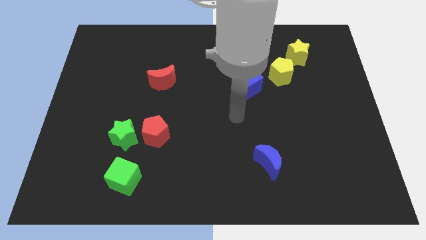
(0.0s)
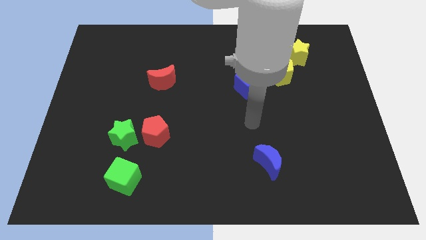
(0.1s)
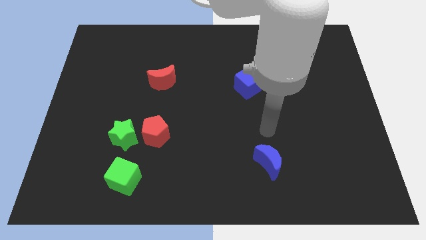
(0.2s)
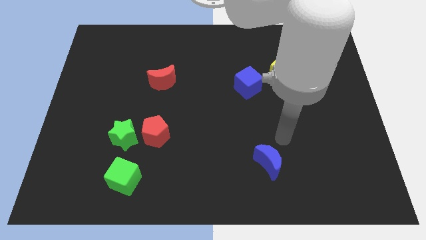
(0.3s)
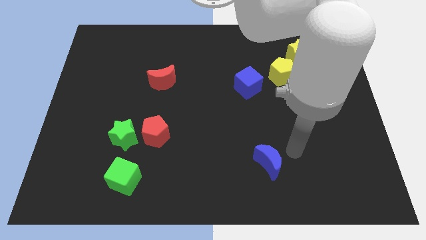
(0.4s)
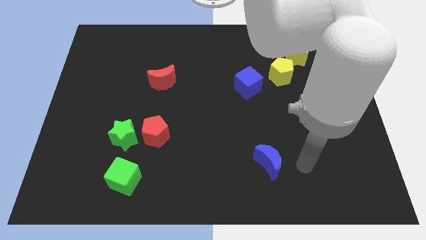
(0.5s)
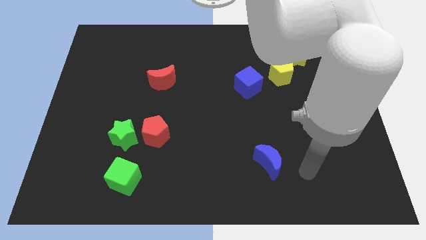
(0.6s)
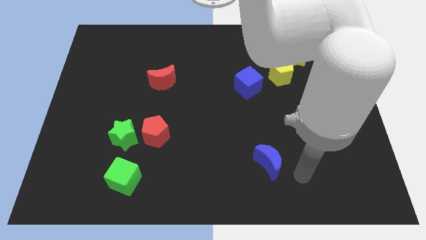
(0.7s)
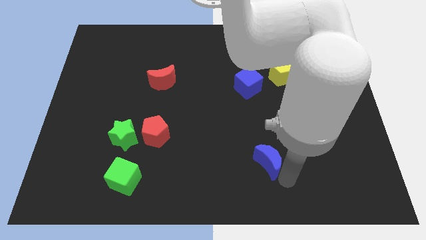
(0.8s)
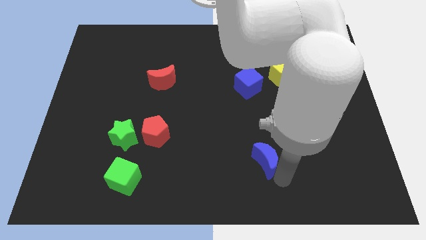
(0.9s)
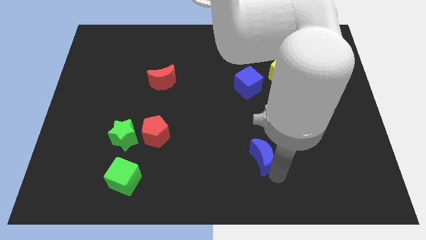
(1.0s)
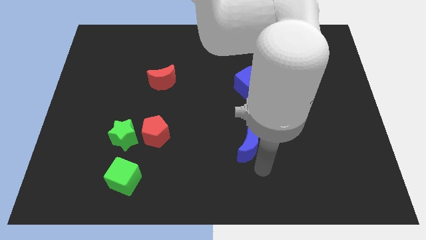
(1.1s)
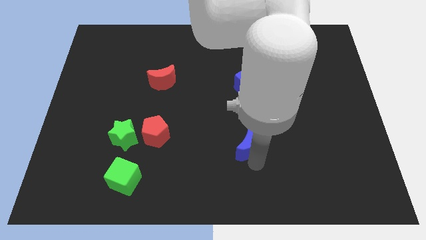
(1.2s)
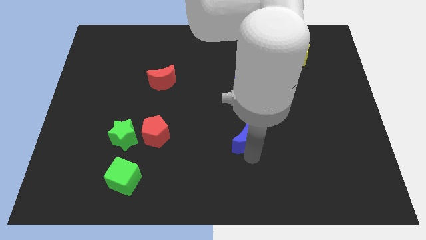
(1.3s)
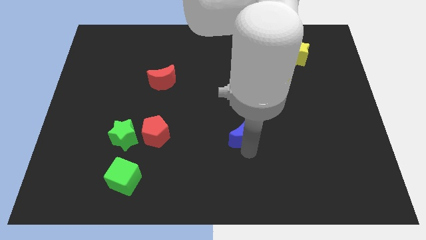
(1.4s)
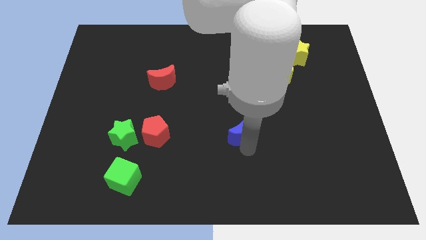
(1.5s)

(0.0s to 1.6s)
move the blue crescent parallel to the right of the red pentagon

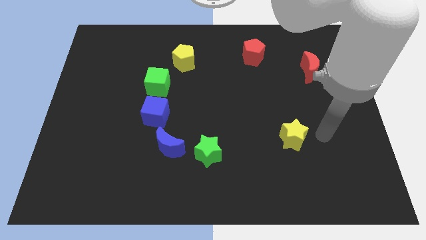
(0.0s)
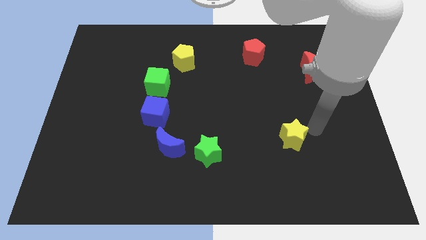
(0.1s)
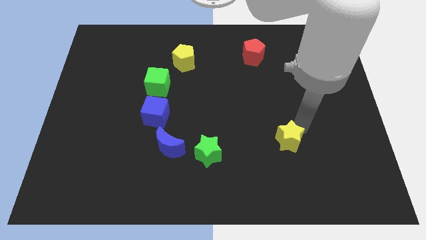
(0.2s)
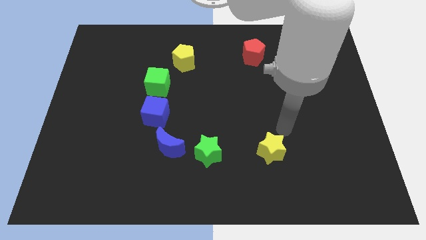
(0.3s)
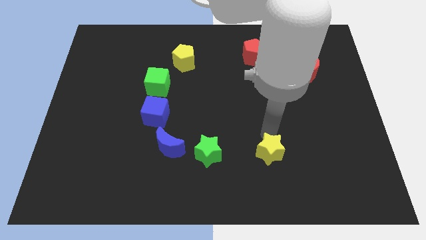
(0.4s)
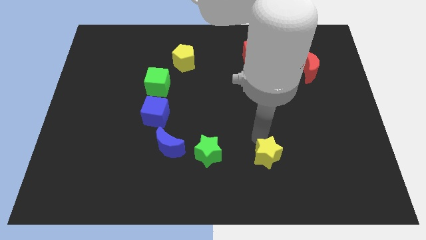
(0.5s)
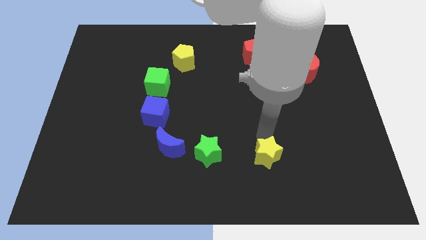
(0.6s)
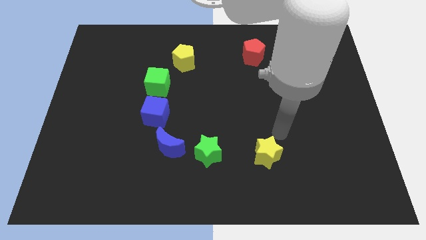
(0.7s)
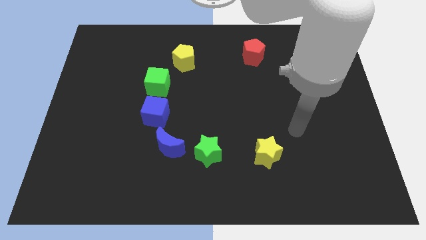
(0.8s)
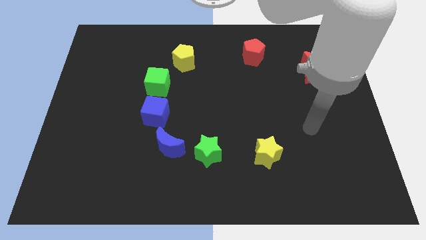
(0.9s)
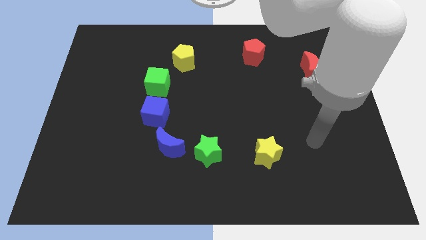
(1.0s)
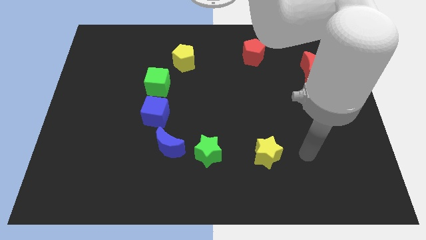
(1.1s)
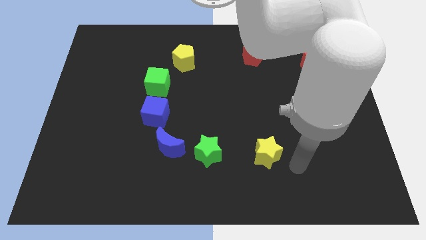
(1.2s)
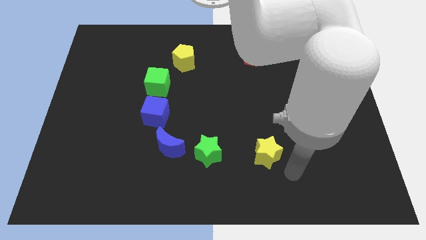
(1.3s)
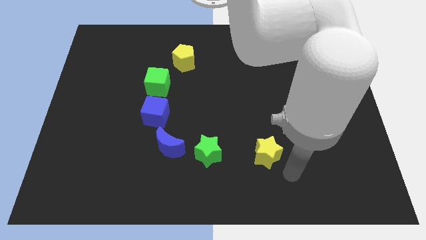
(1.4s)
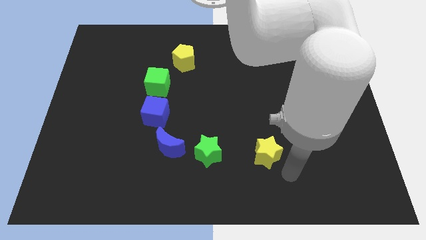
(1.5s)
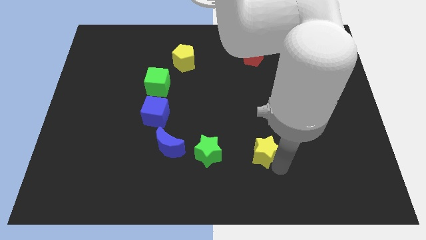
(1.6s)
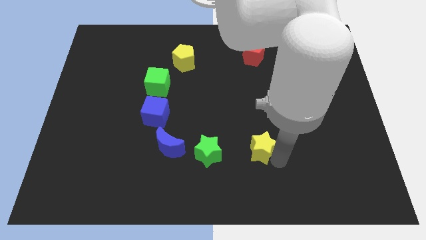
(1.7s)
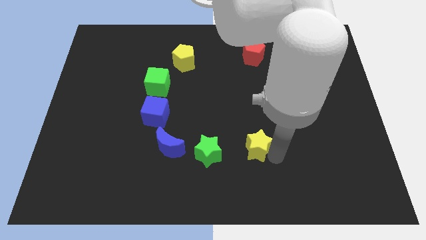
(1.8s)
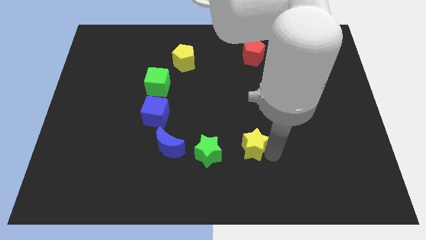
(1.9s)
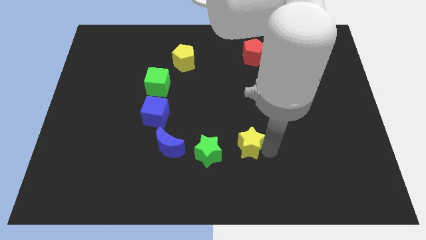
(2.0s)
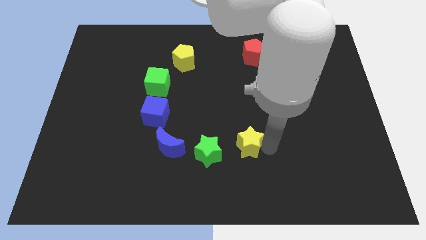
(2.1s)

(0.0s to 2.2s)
move the yellow star to the right of the green star

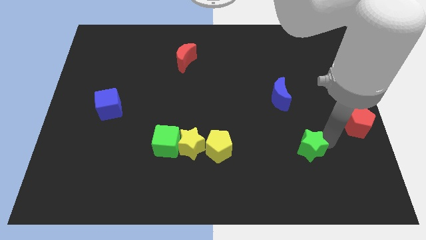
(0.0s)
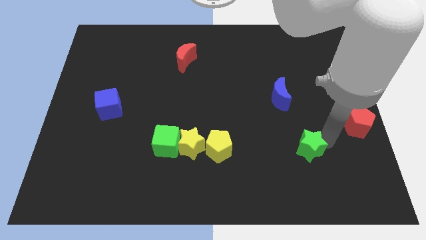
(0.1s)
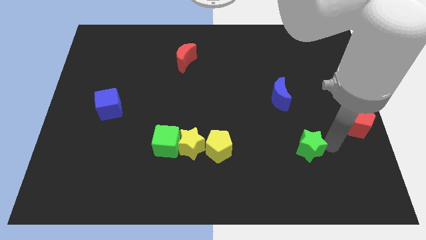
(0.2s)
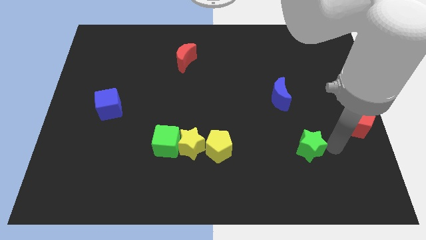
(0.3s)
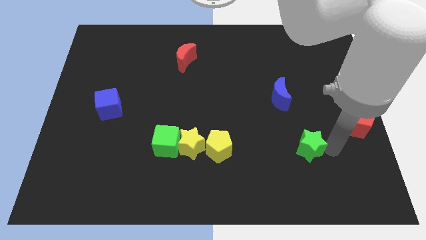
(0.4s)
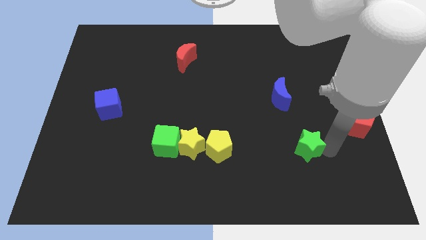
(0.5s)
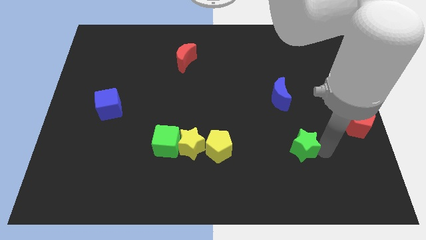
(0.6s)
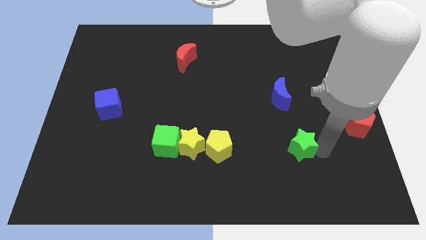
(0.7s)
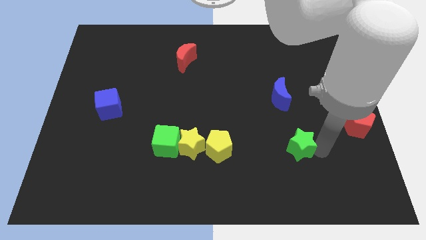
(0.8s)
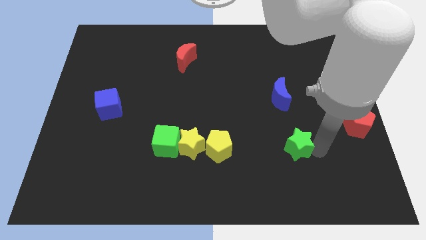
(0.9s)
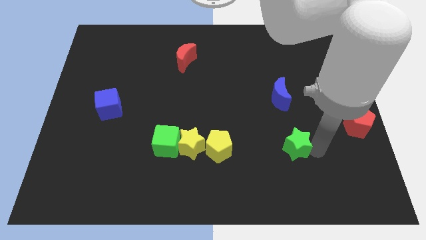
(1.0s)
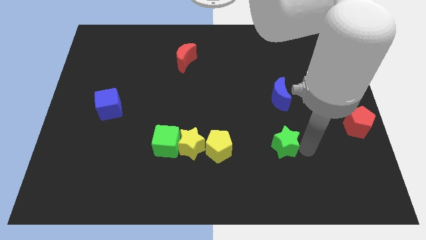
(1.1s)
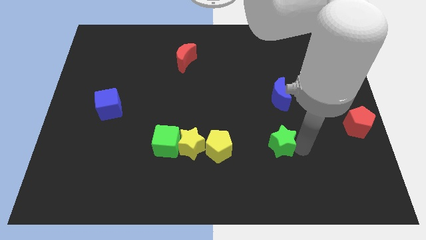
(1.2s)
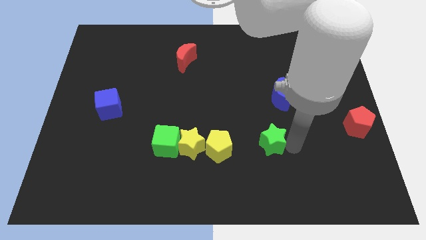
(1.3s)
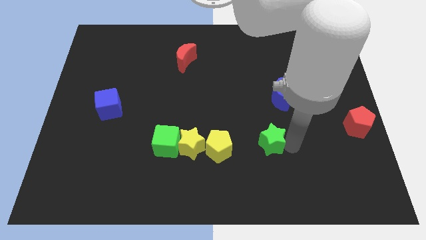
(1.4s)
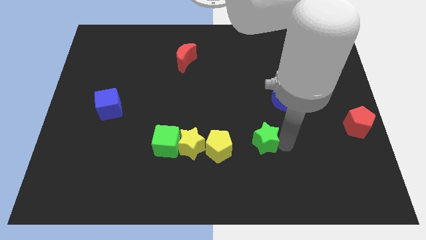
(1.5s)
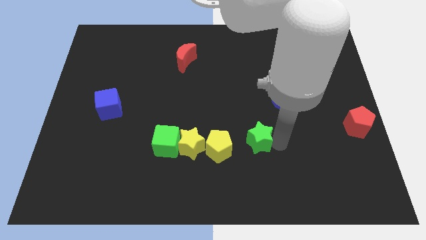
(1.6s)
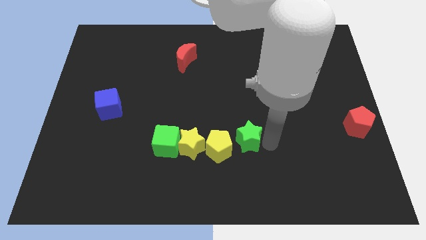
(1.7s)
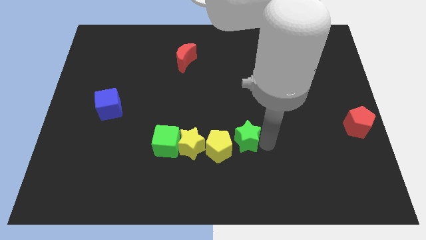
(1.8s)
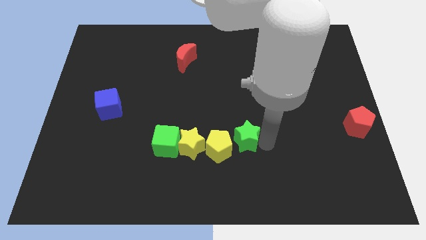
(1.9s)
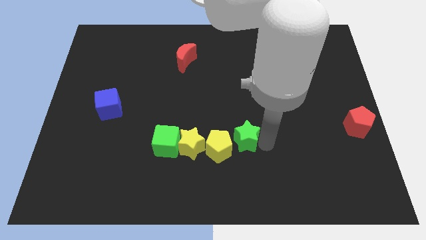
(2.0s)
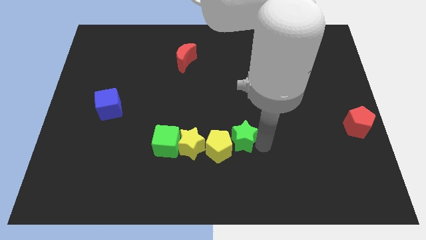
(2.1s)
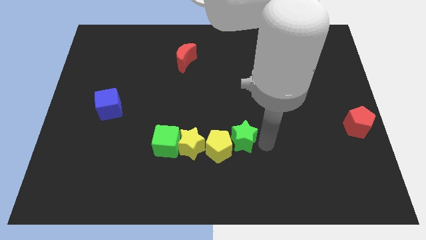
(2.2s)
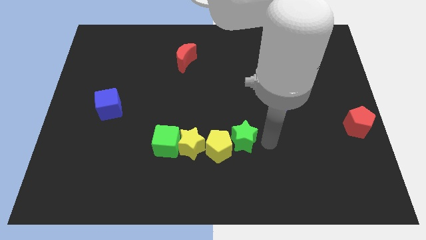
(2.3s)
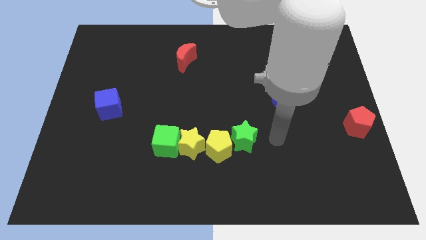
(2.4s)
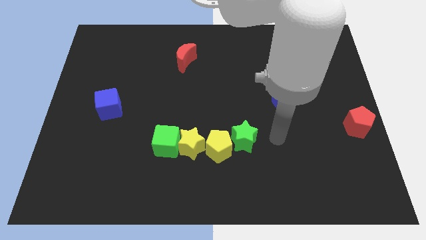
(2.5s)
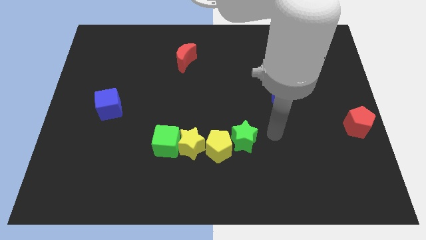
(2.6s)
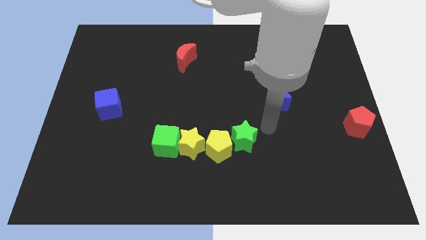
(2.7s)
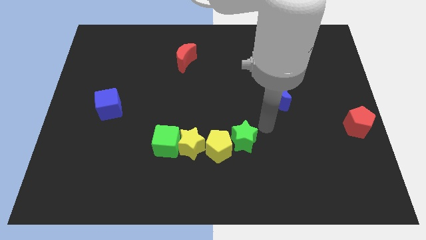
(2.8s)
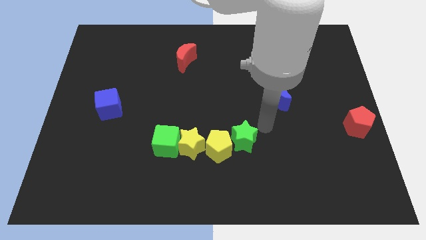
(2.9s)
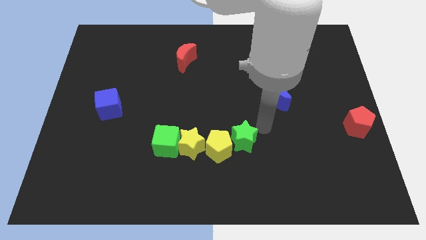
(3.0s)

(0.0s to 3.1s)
move green star towards yellow pentagon

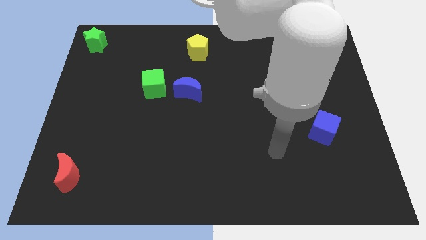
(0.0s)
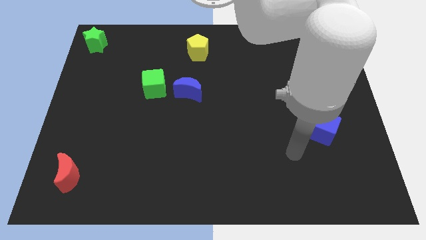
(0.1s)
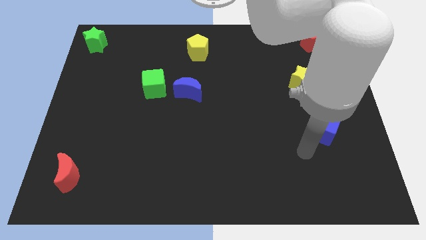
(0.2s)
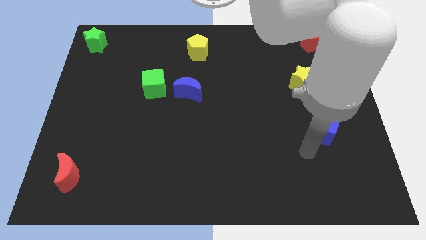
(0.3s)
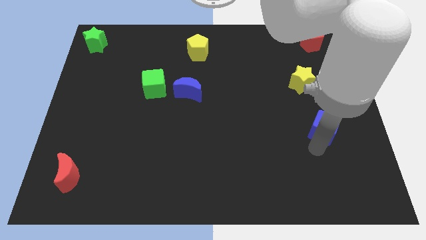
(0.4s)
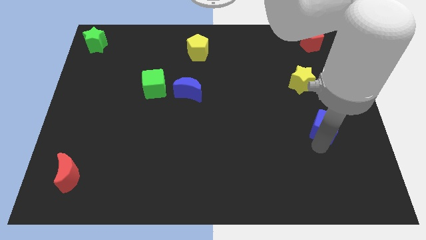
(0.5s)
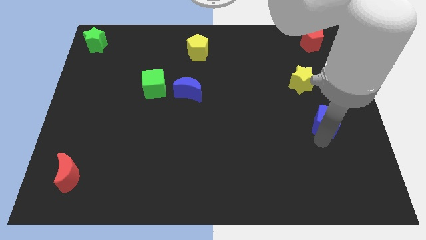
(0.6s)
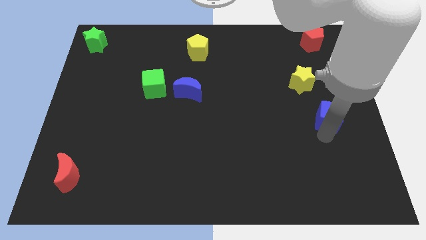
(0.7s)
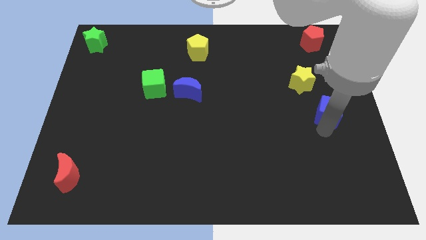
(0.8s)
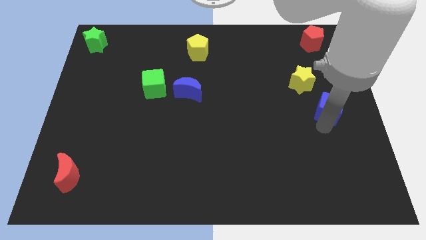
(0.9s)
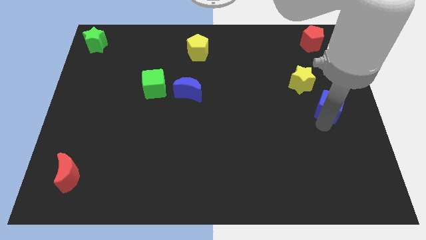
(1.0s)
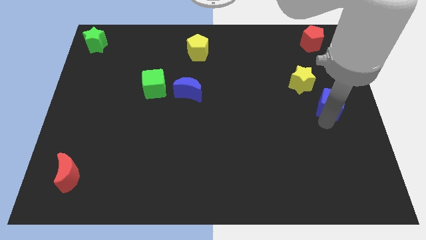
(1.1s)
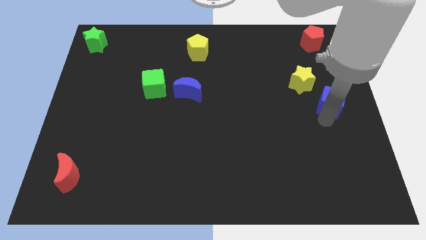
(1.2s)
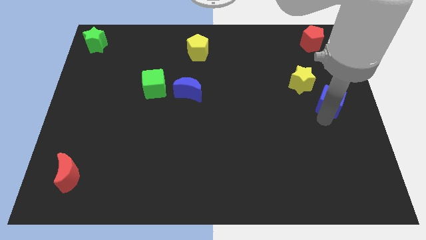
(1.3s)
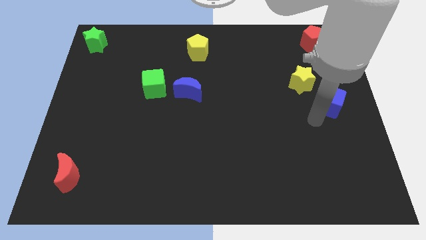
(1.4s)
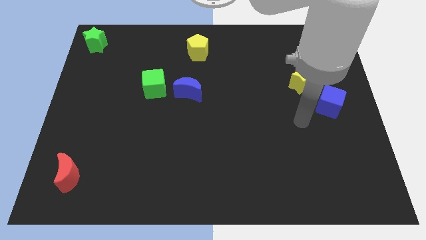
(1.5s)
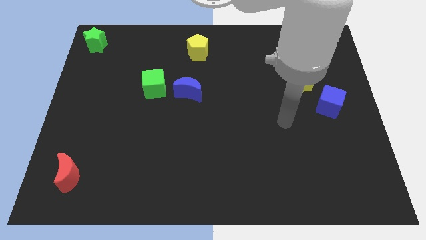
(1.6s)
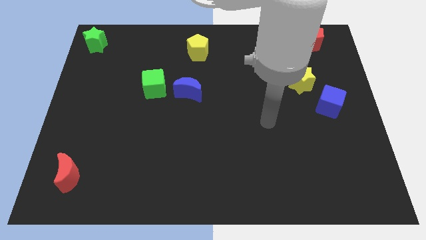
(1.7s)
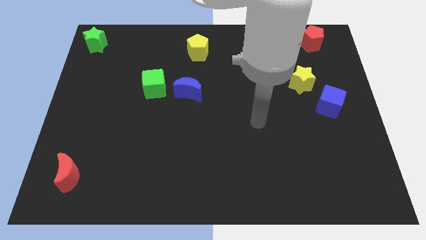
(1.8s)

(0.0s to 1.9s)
move the blue cube diagonally right of the yellow star

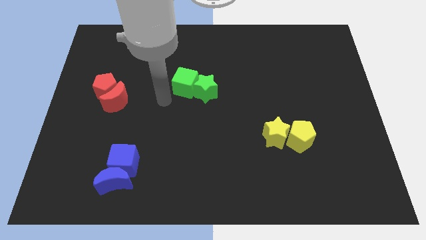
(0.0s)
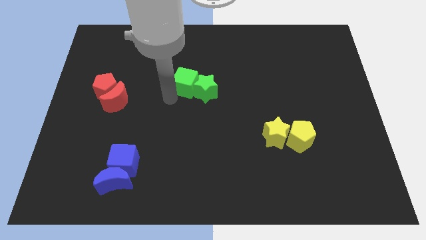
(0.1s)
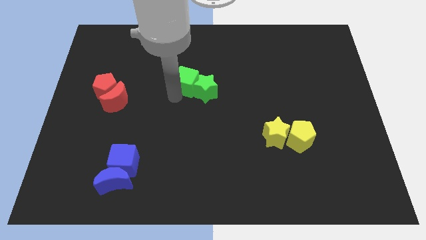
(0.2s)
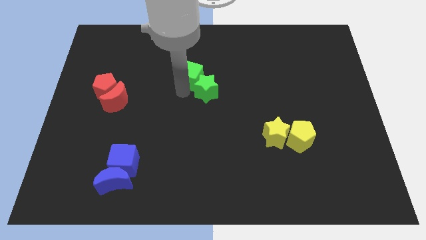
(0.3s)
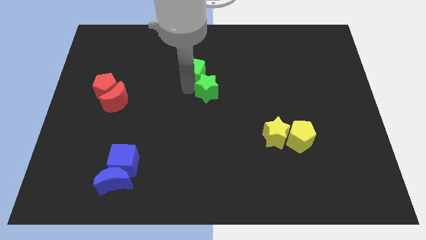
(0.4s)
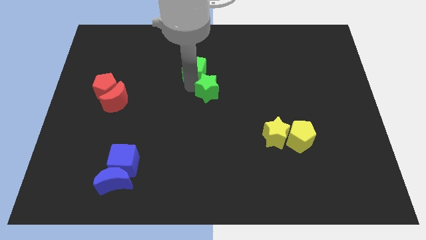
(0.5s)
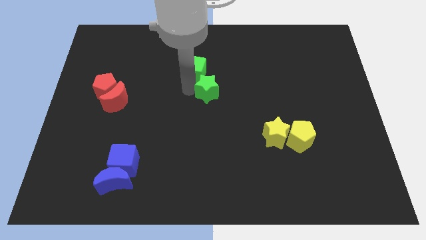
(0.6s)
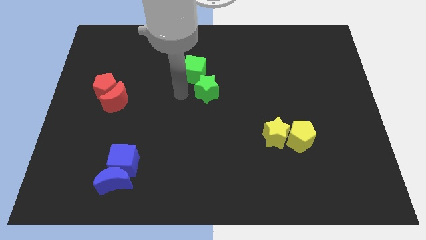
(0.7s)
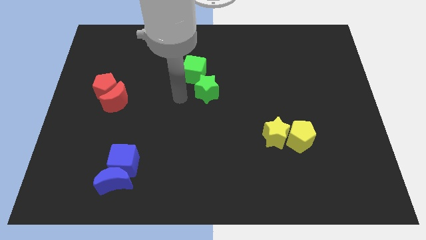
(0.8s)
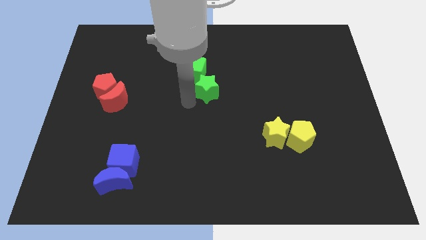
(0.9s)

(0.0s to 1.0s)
push green cube slight upside
